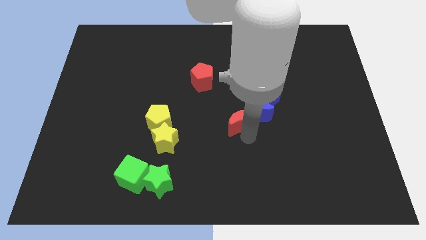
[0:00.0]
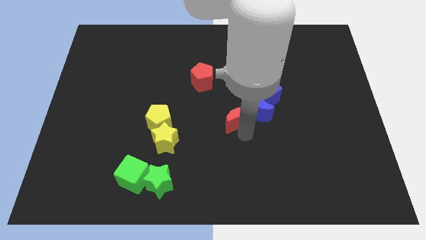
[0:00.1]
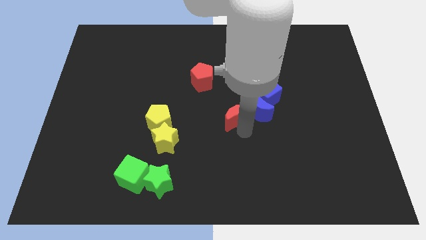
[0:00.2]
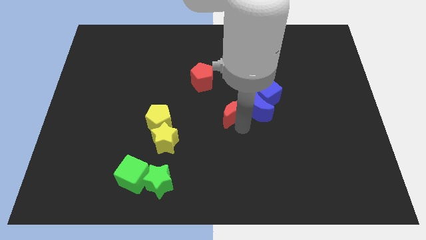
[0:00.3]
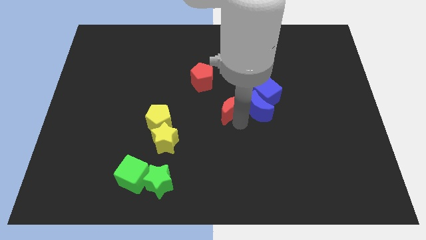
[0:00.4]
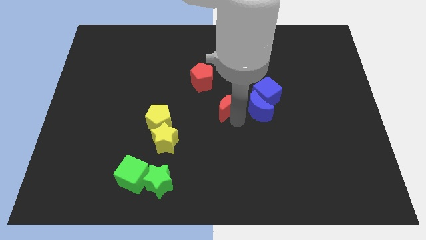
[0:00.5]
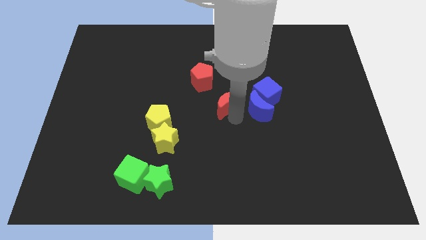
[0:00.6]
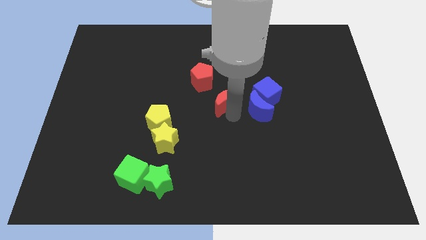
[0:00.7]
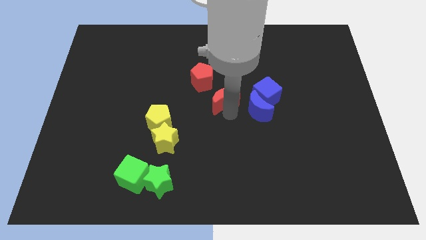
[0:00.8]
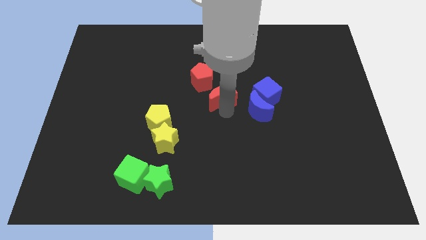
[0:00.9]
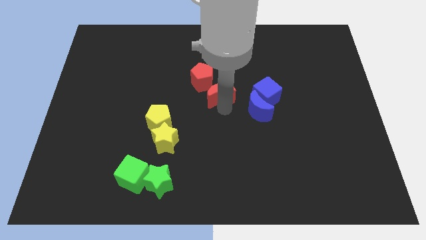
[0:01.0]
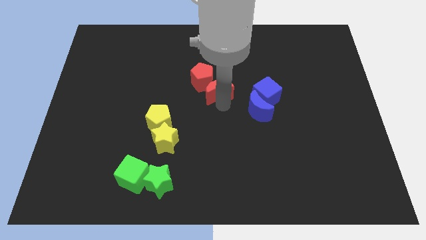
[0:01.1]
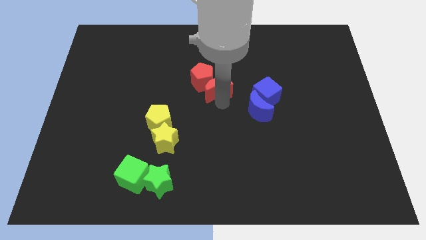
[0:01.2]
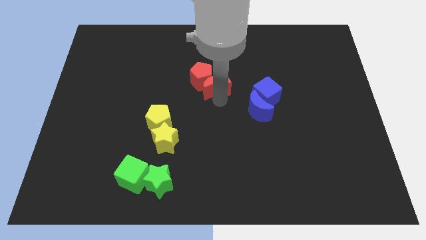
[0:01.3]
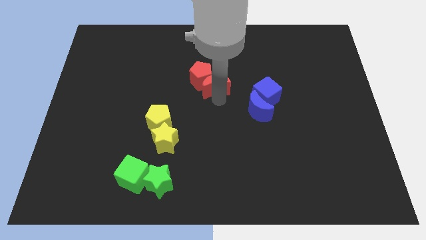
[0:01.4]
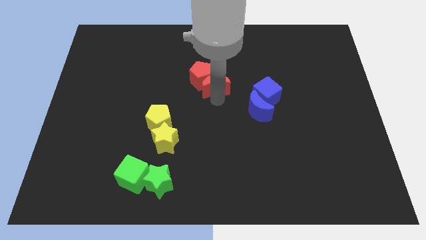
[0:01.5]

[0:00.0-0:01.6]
push the red crescent close to the red pentagon

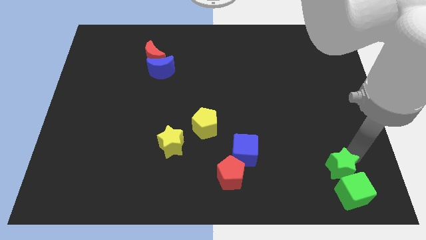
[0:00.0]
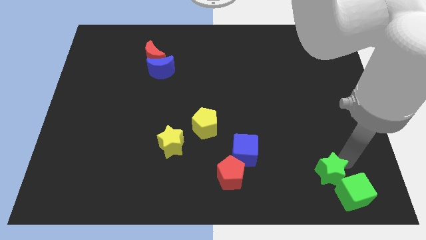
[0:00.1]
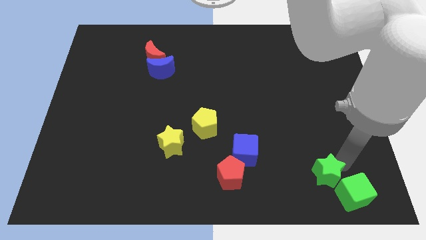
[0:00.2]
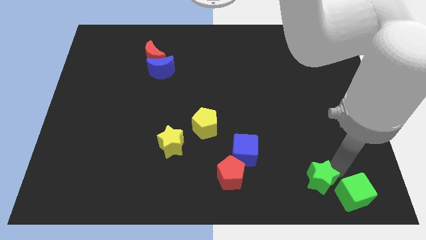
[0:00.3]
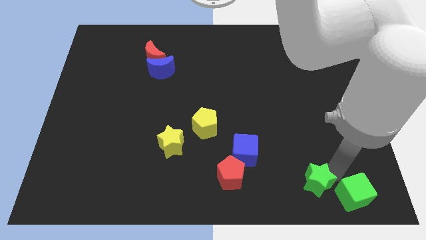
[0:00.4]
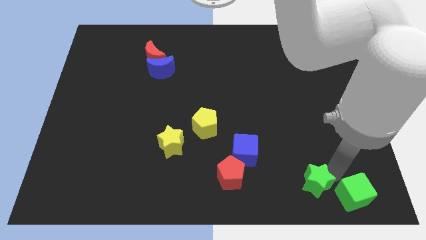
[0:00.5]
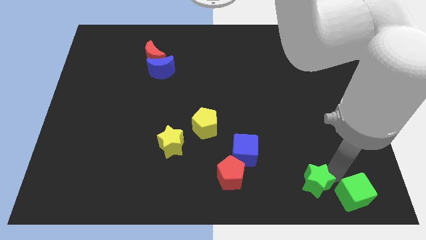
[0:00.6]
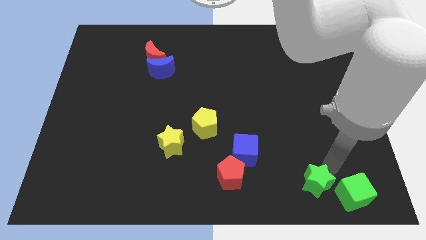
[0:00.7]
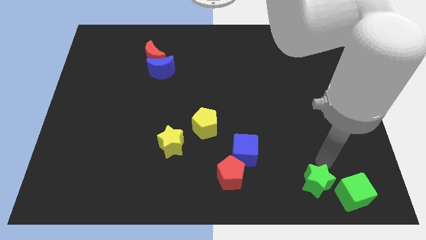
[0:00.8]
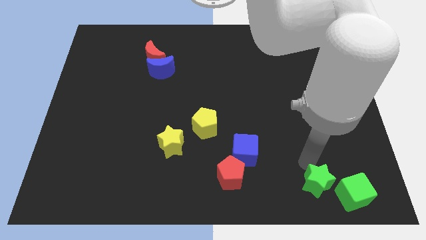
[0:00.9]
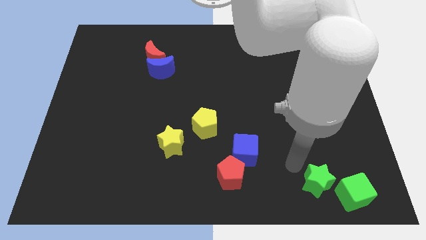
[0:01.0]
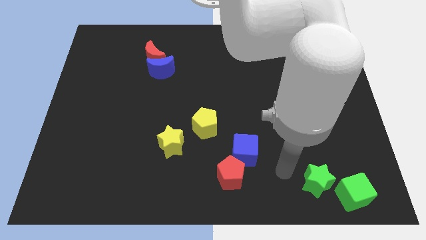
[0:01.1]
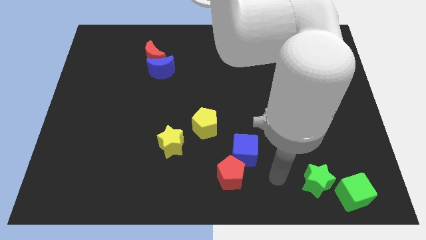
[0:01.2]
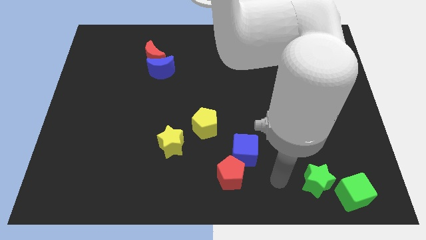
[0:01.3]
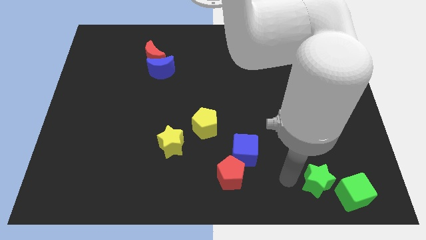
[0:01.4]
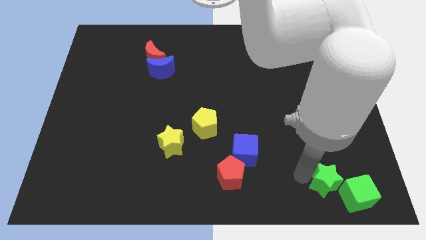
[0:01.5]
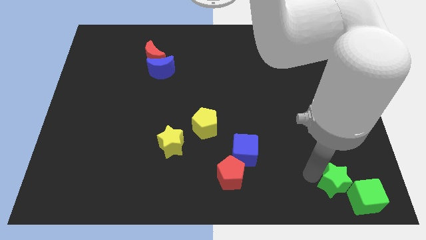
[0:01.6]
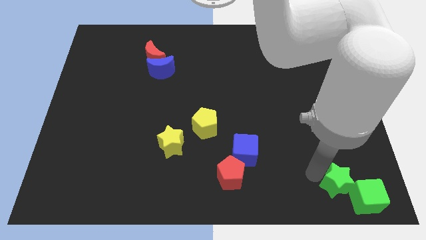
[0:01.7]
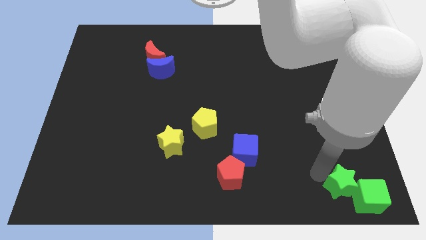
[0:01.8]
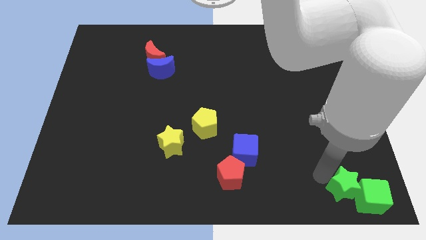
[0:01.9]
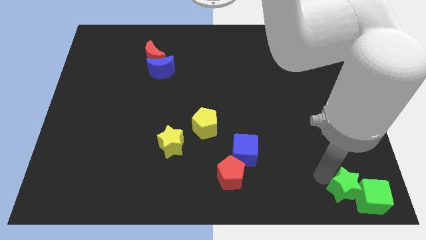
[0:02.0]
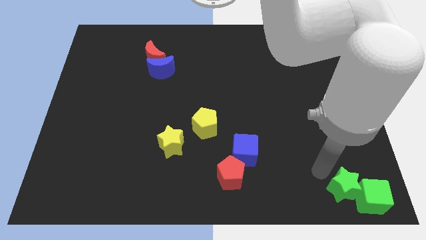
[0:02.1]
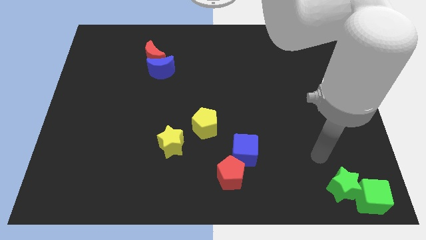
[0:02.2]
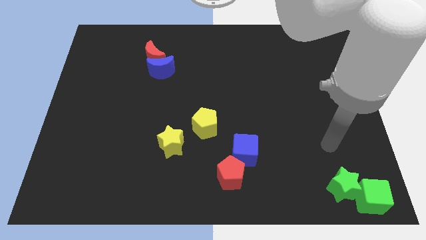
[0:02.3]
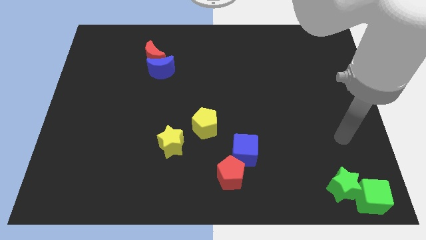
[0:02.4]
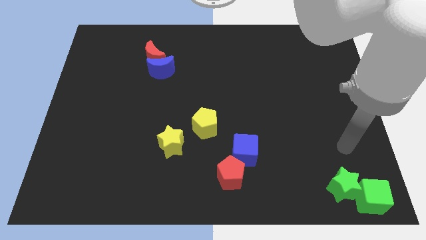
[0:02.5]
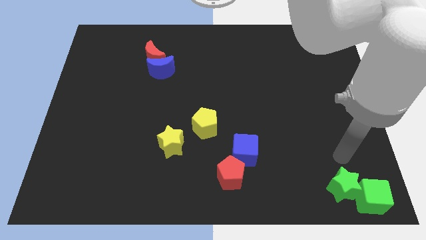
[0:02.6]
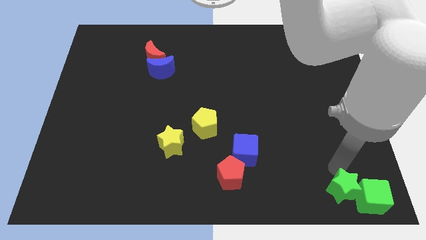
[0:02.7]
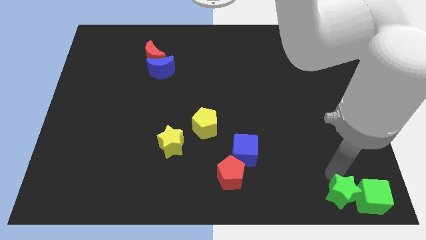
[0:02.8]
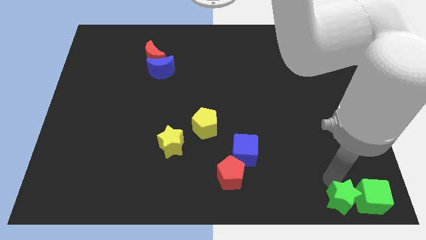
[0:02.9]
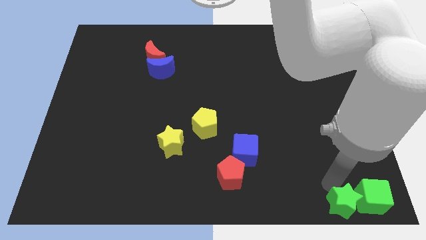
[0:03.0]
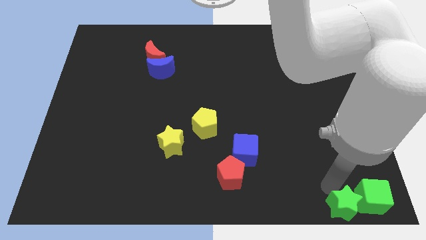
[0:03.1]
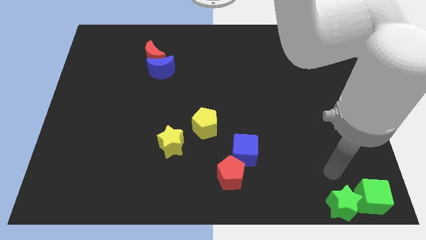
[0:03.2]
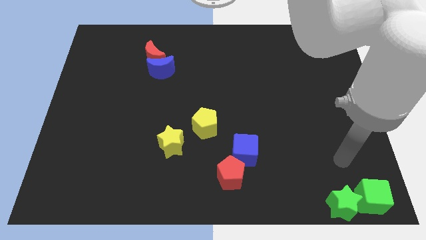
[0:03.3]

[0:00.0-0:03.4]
place the green star to the left of the green cube

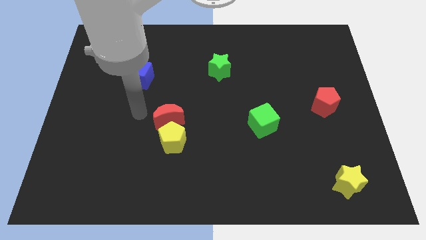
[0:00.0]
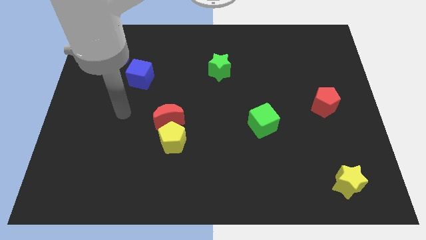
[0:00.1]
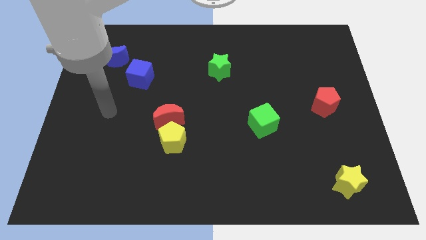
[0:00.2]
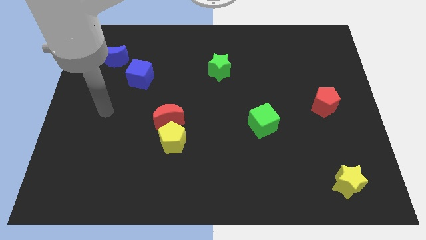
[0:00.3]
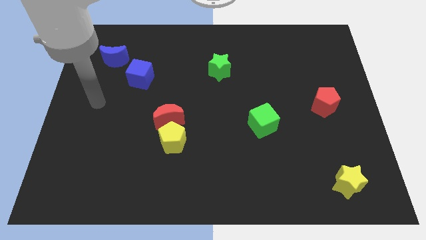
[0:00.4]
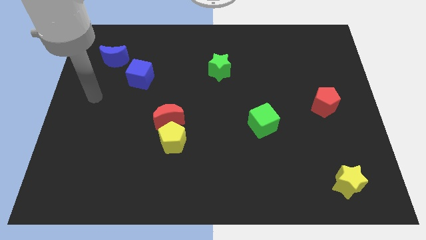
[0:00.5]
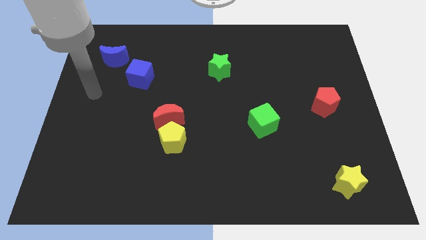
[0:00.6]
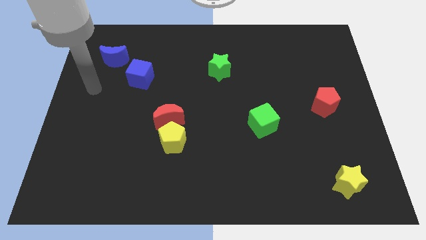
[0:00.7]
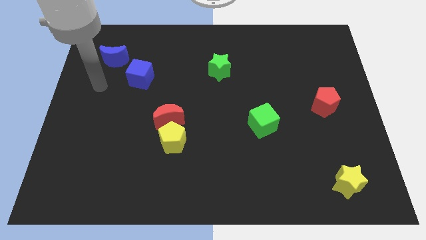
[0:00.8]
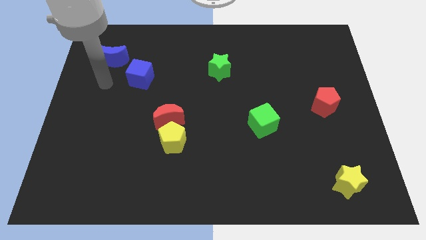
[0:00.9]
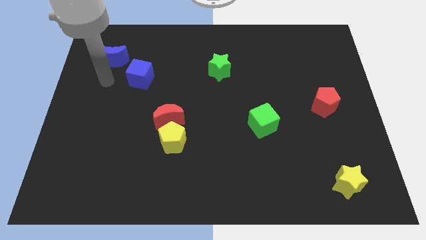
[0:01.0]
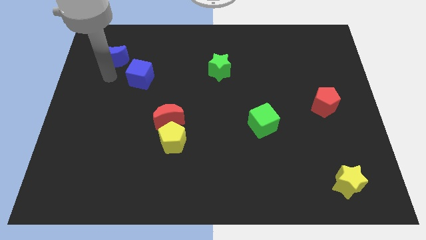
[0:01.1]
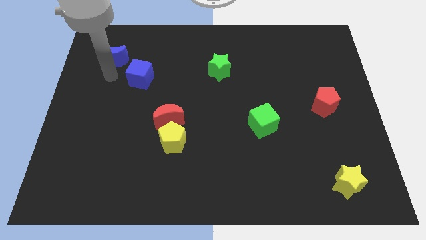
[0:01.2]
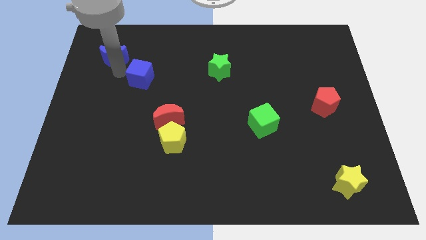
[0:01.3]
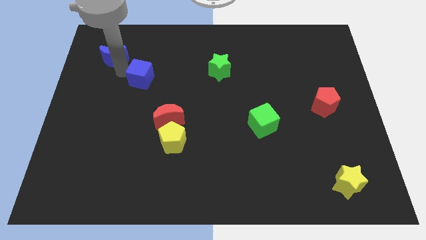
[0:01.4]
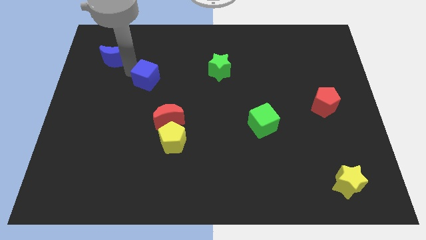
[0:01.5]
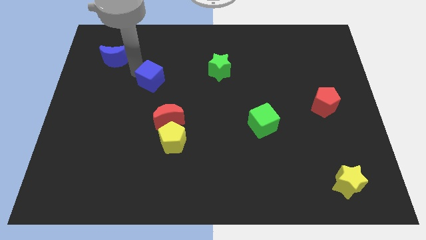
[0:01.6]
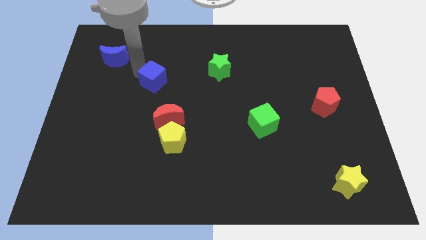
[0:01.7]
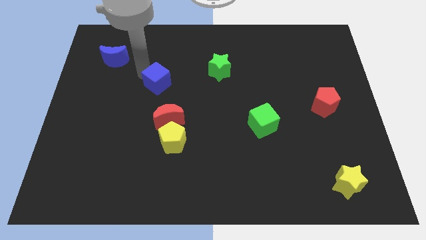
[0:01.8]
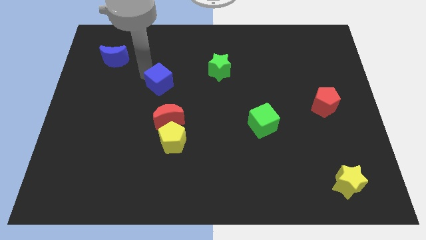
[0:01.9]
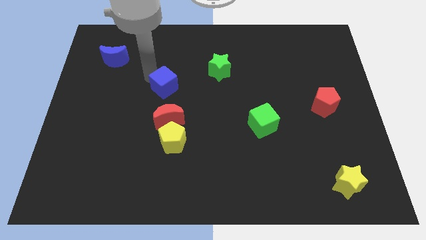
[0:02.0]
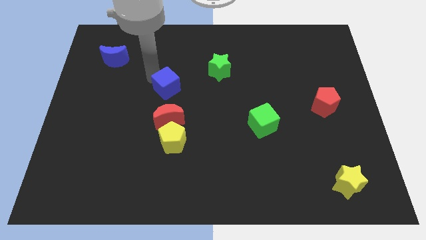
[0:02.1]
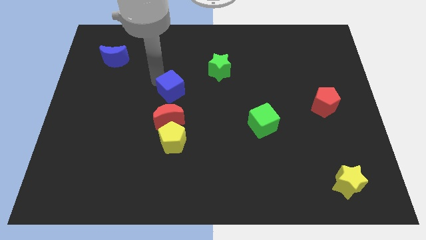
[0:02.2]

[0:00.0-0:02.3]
place the blue cube above the red moon

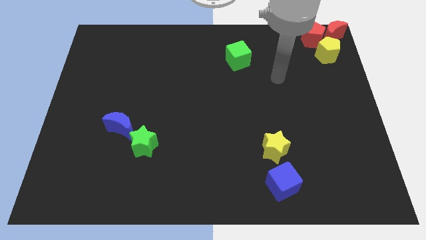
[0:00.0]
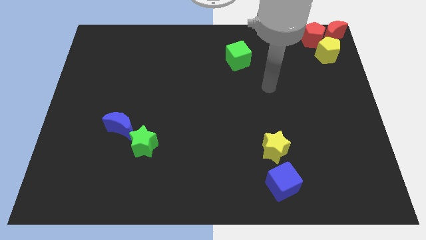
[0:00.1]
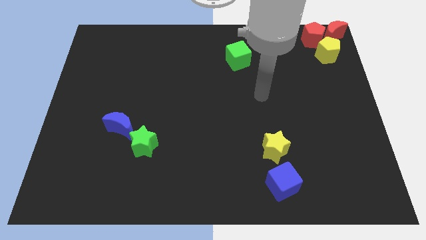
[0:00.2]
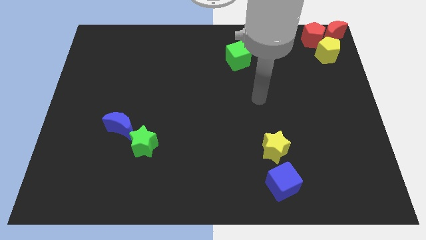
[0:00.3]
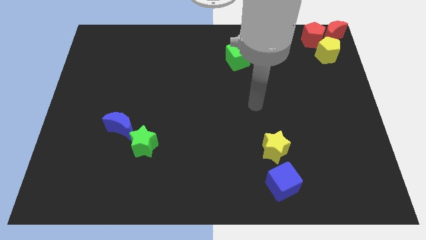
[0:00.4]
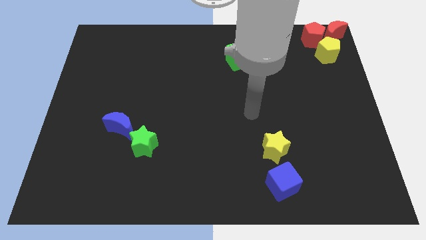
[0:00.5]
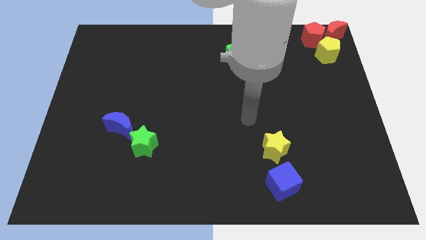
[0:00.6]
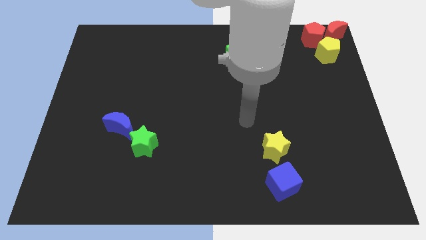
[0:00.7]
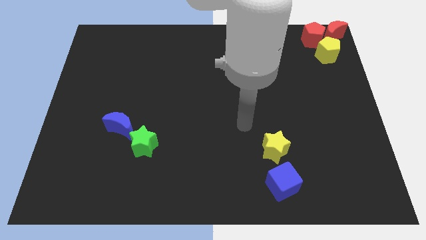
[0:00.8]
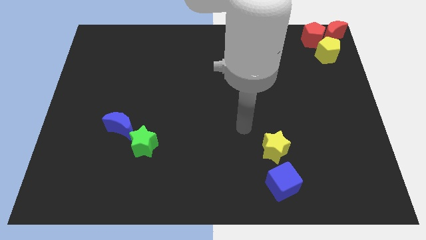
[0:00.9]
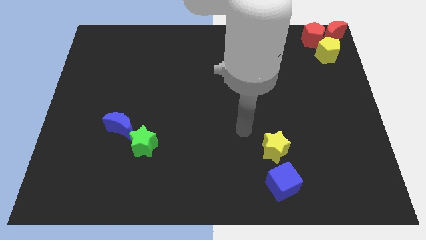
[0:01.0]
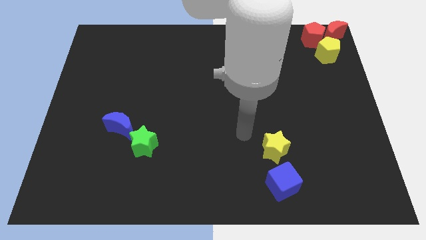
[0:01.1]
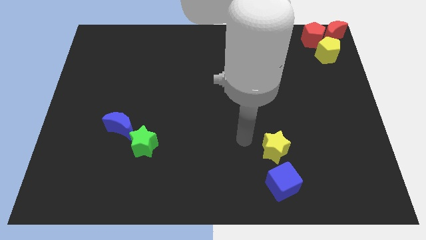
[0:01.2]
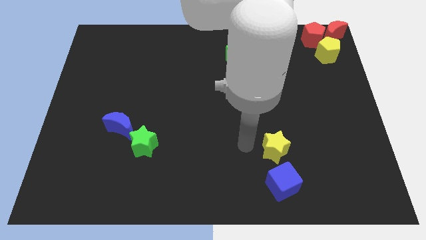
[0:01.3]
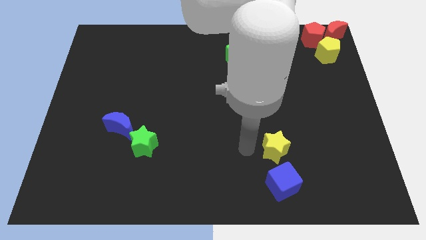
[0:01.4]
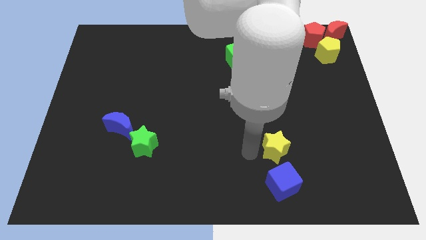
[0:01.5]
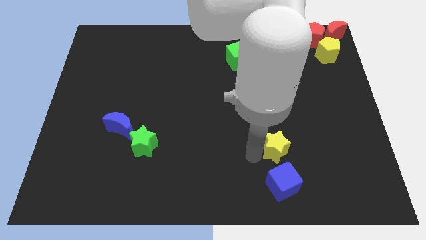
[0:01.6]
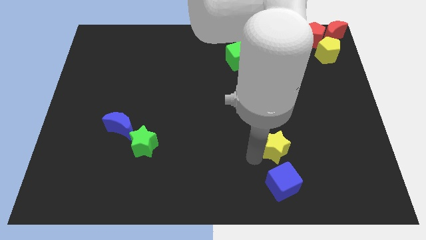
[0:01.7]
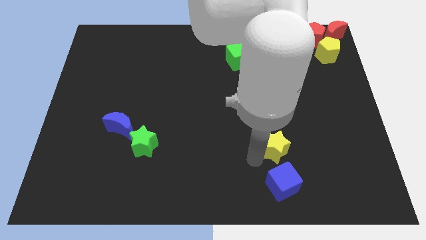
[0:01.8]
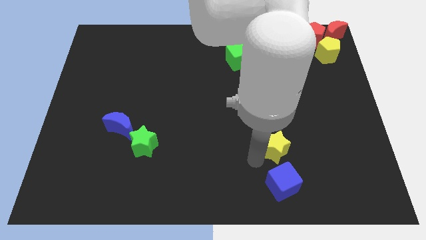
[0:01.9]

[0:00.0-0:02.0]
move the arm towards the yellow star
